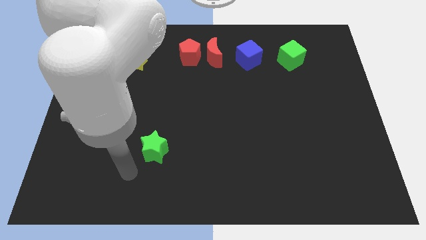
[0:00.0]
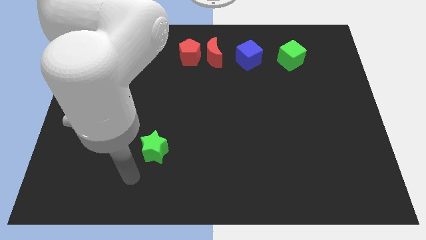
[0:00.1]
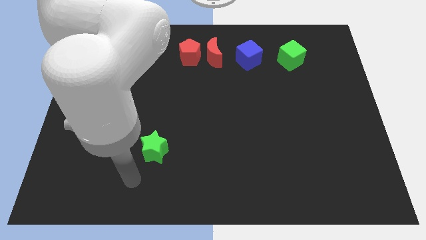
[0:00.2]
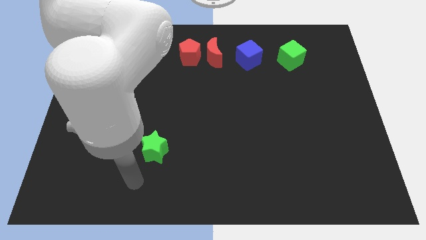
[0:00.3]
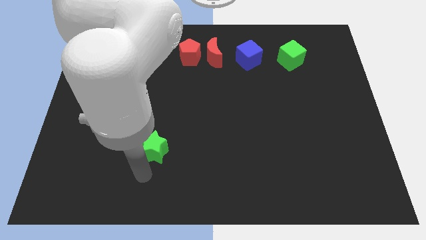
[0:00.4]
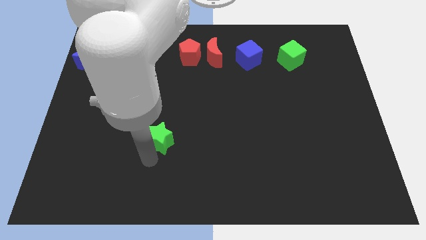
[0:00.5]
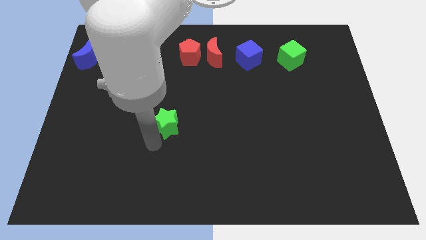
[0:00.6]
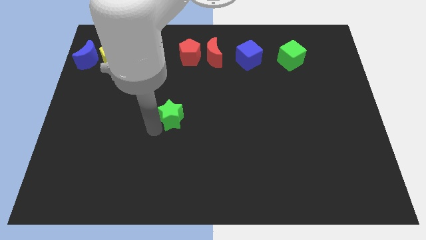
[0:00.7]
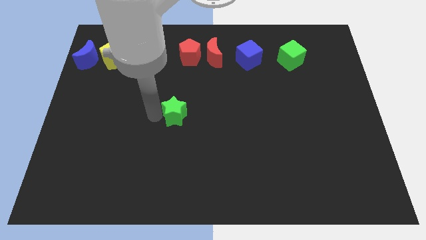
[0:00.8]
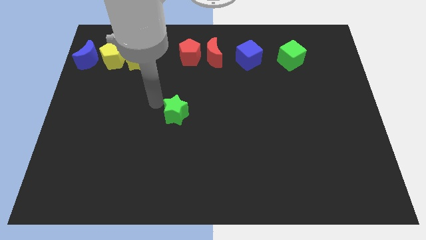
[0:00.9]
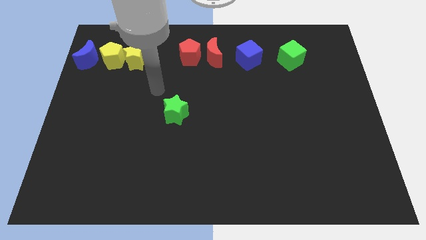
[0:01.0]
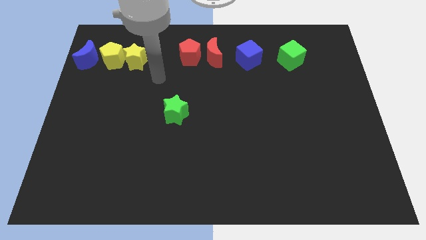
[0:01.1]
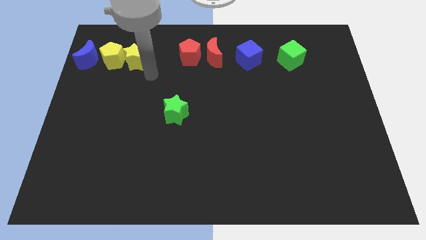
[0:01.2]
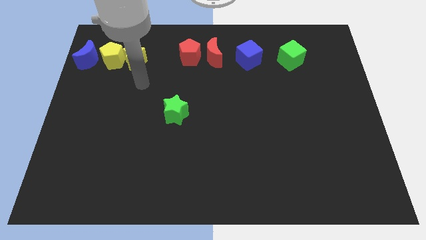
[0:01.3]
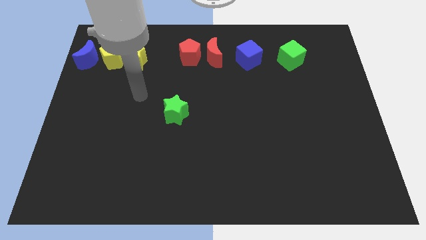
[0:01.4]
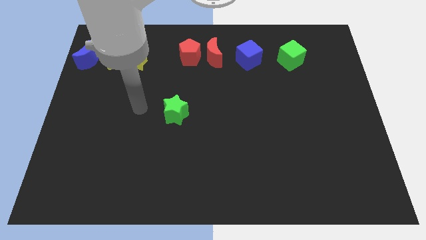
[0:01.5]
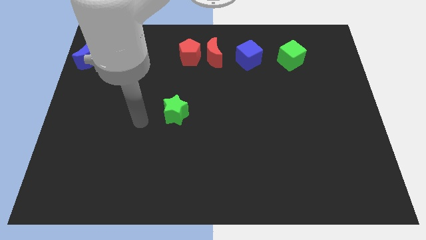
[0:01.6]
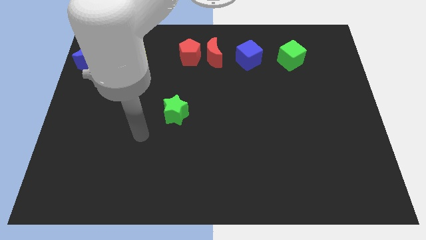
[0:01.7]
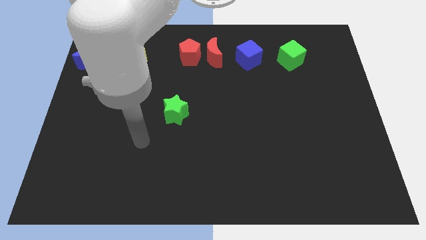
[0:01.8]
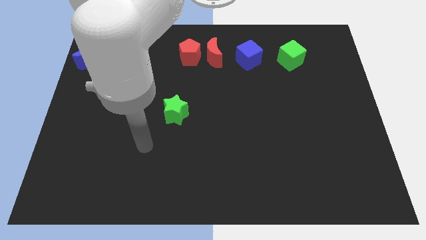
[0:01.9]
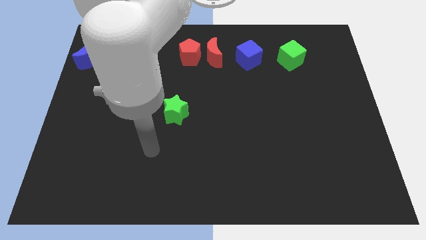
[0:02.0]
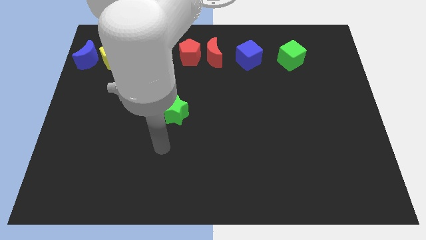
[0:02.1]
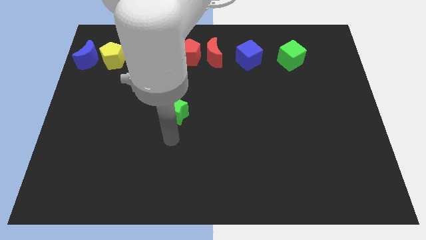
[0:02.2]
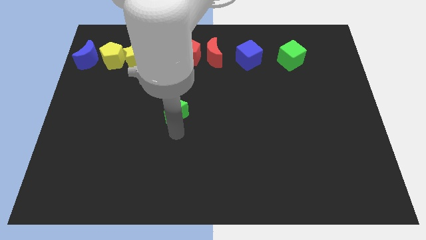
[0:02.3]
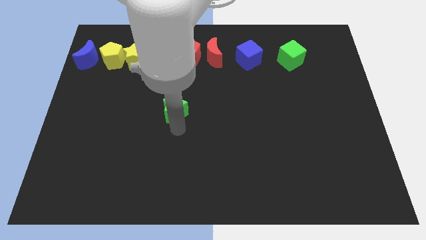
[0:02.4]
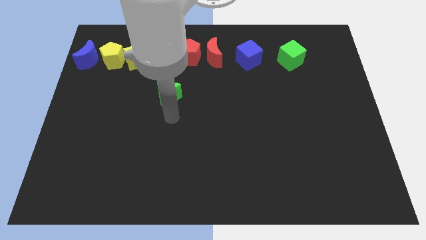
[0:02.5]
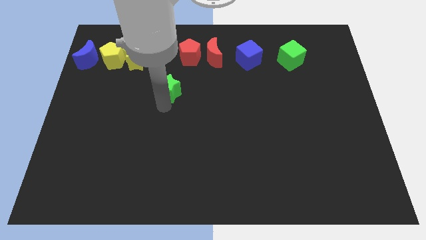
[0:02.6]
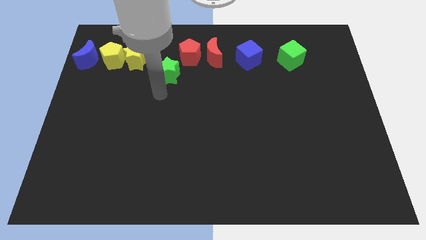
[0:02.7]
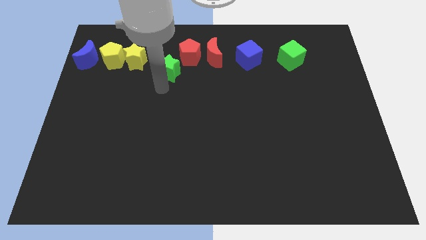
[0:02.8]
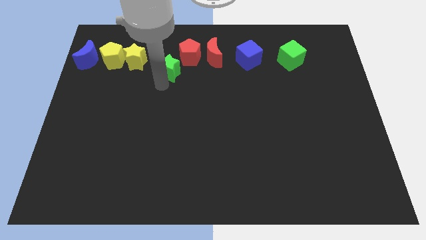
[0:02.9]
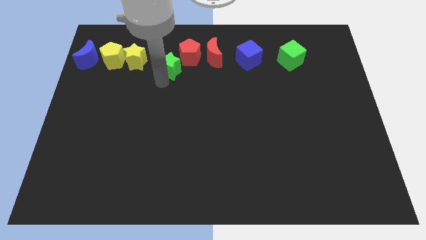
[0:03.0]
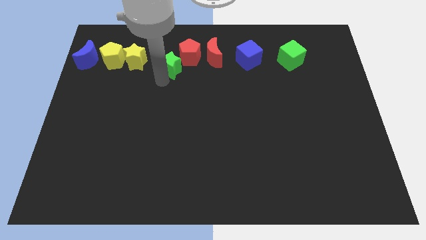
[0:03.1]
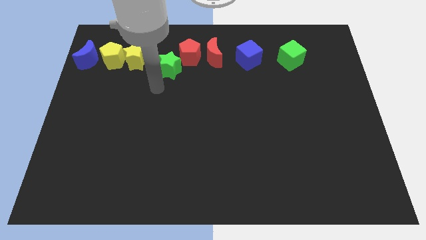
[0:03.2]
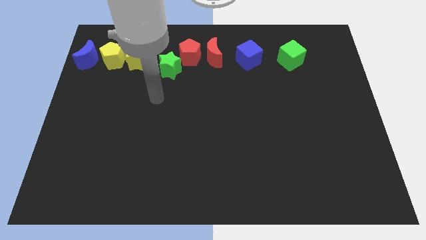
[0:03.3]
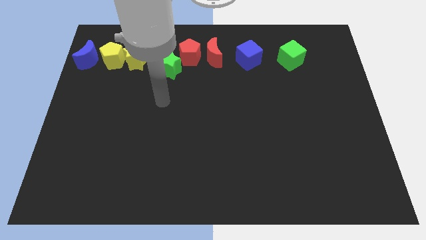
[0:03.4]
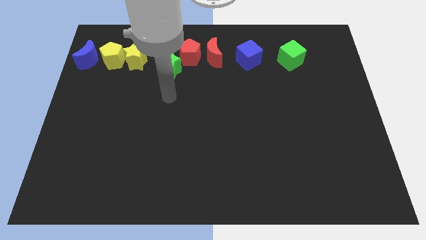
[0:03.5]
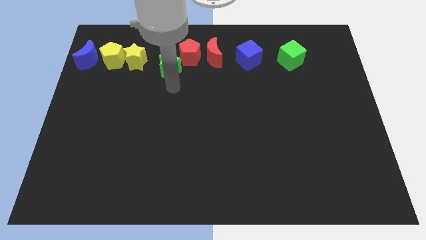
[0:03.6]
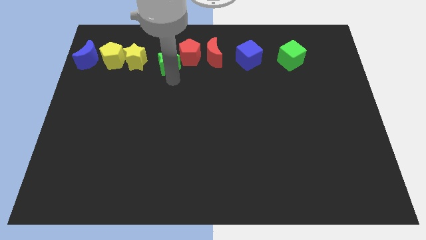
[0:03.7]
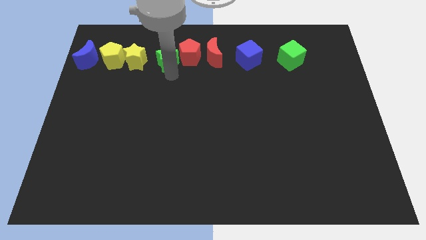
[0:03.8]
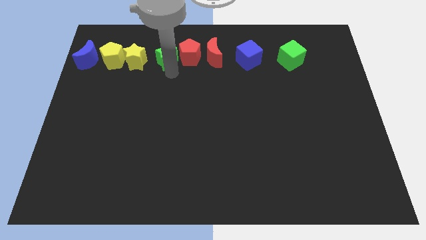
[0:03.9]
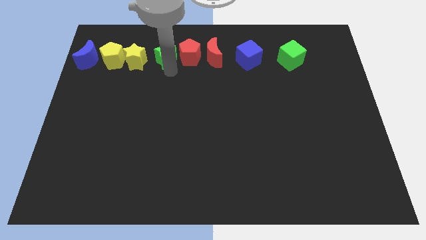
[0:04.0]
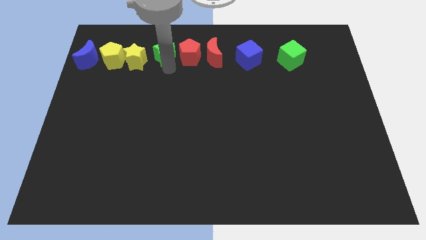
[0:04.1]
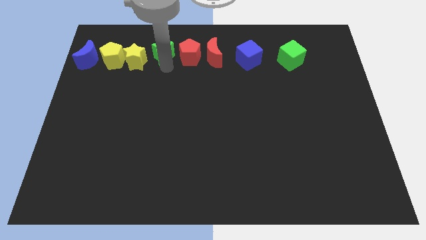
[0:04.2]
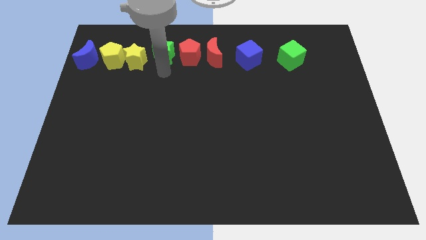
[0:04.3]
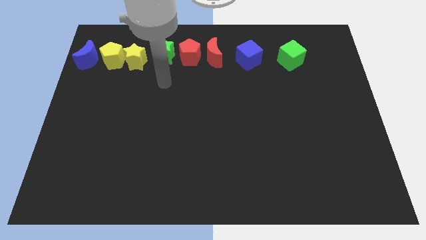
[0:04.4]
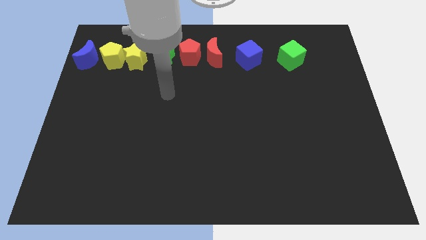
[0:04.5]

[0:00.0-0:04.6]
push the green star to the left of red pentagon

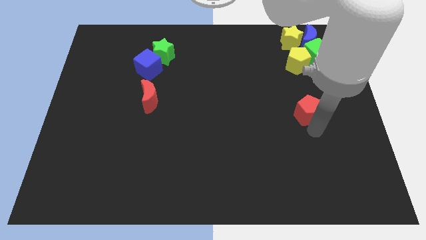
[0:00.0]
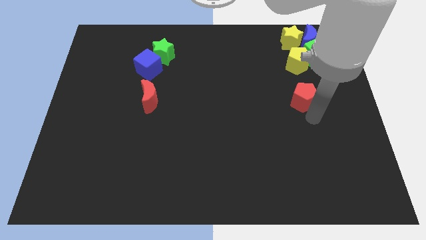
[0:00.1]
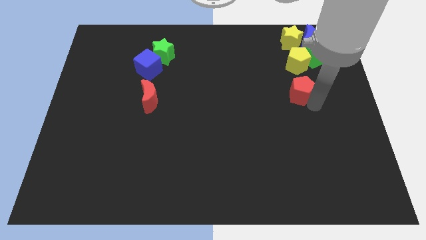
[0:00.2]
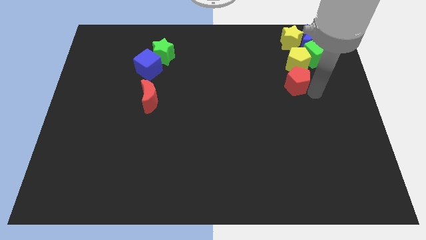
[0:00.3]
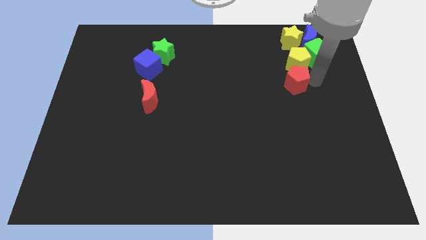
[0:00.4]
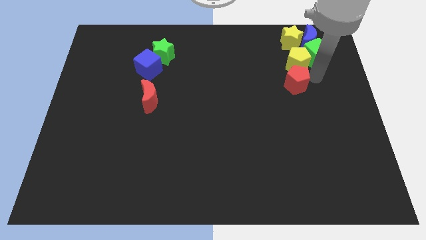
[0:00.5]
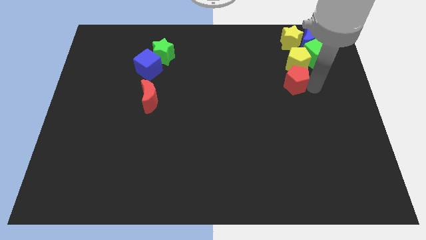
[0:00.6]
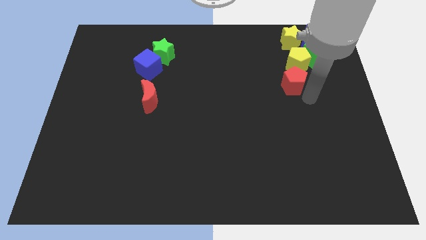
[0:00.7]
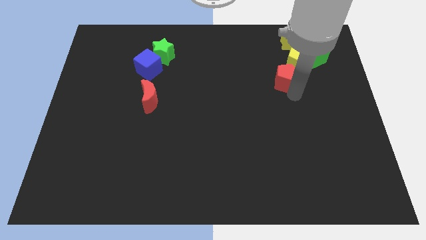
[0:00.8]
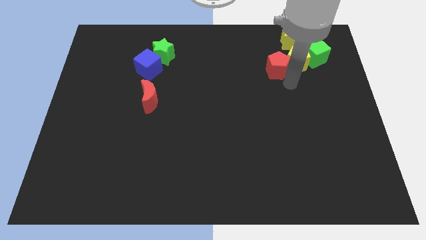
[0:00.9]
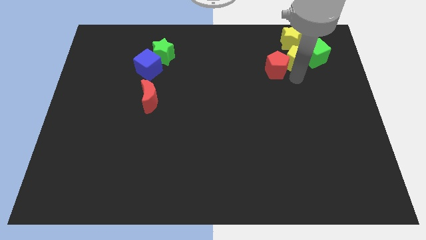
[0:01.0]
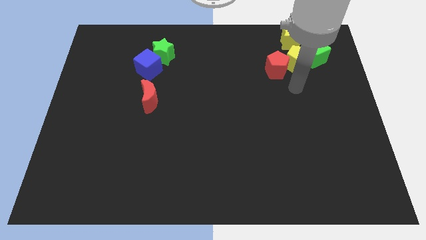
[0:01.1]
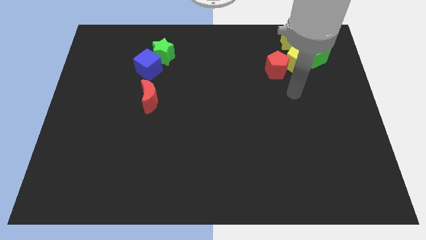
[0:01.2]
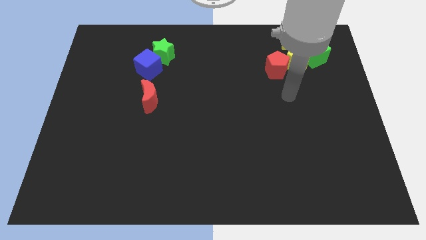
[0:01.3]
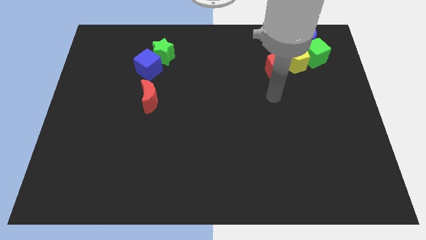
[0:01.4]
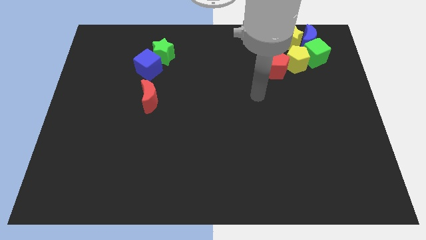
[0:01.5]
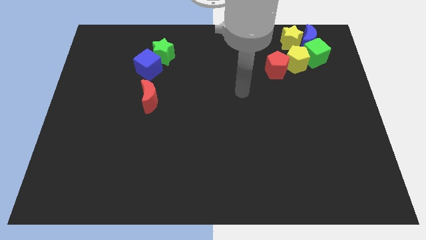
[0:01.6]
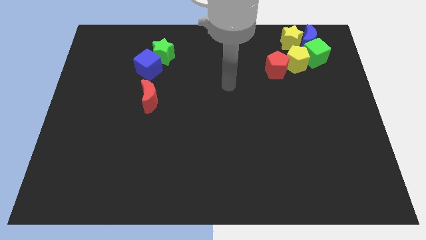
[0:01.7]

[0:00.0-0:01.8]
push the red pentagon to the left of the yellow pentagon

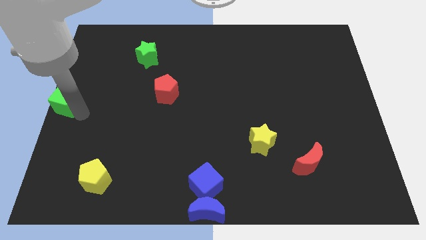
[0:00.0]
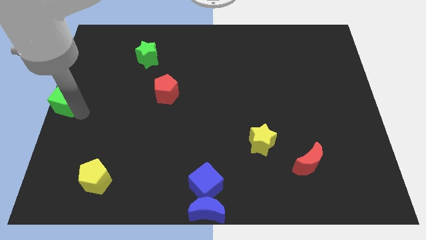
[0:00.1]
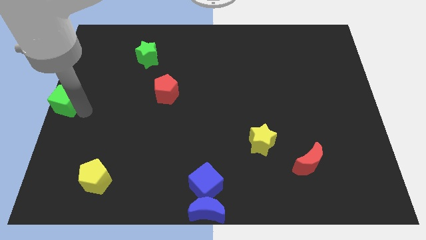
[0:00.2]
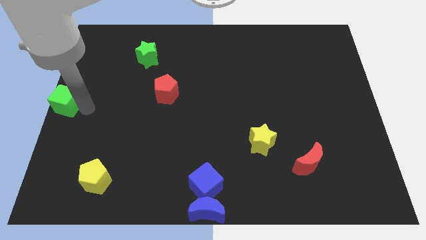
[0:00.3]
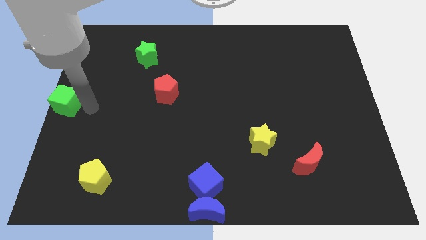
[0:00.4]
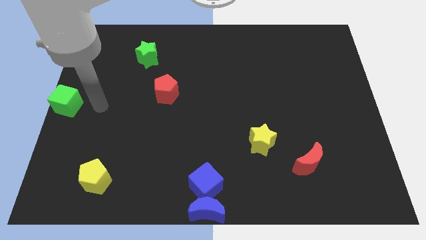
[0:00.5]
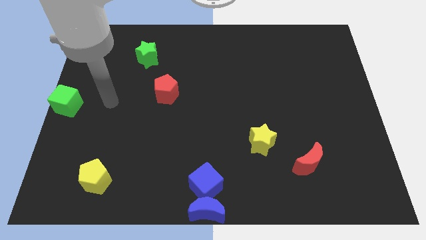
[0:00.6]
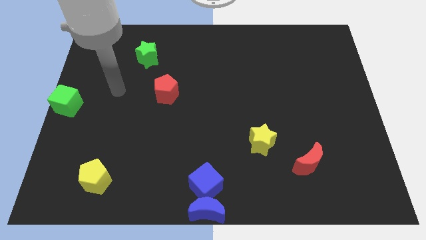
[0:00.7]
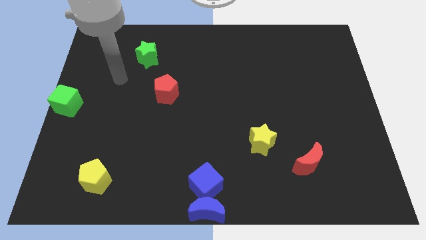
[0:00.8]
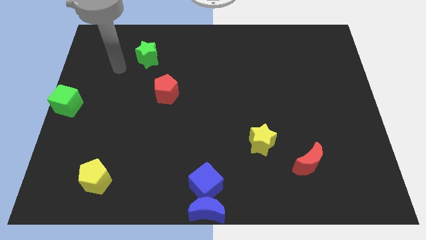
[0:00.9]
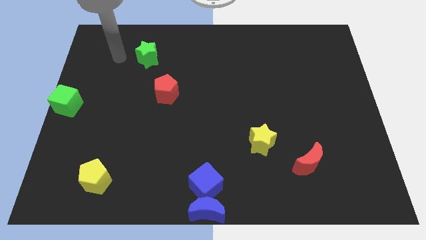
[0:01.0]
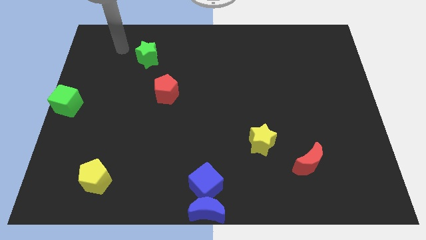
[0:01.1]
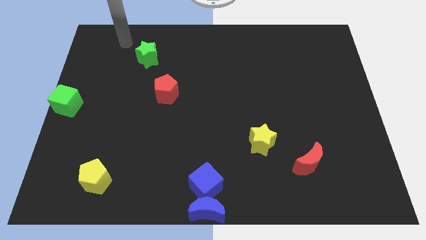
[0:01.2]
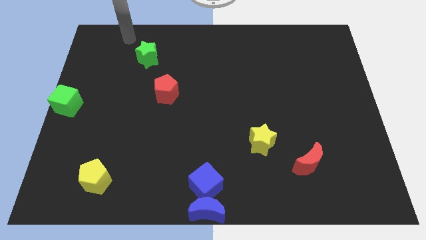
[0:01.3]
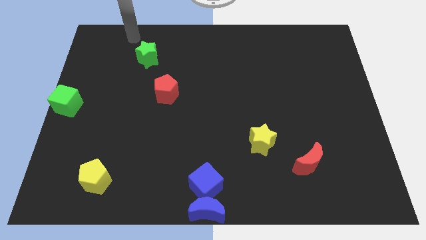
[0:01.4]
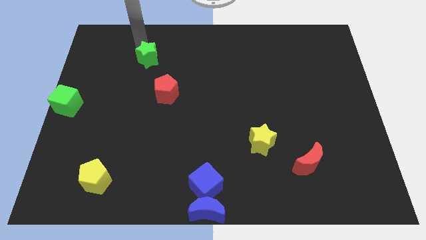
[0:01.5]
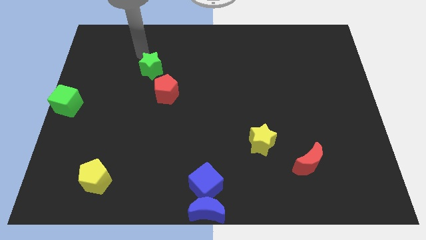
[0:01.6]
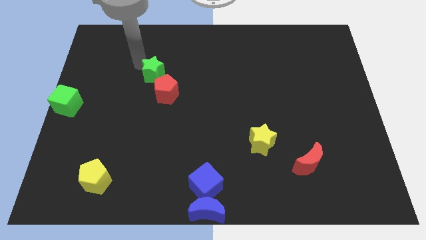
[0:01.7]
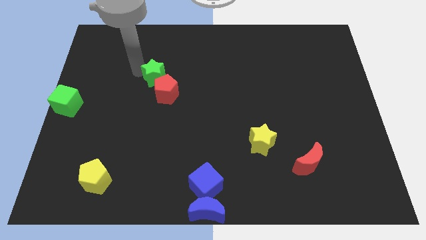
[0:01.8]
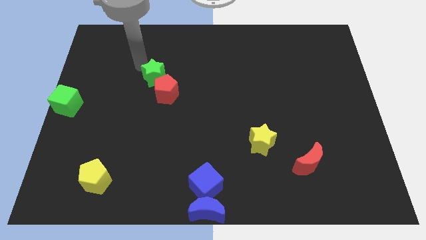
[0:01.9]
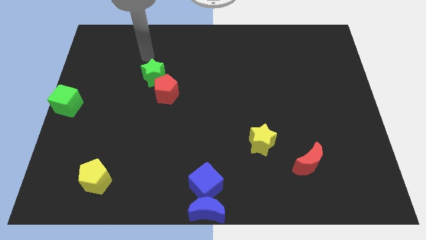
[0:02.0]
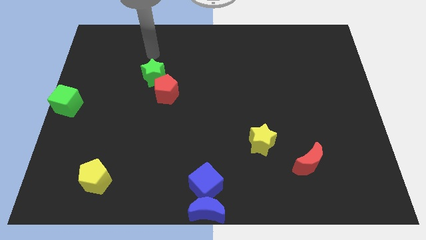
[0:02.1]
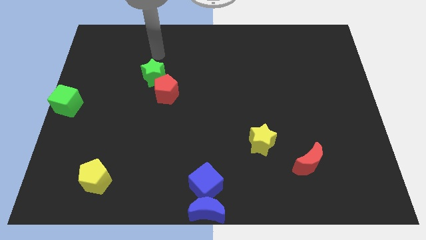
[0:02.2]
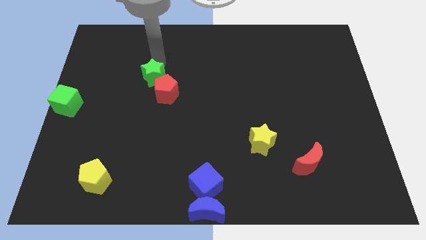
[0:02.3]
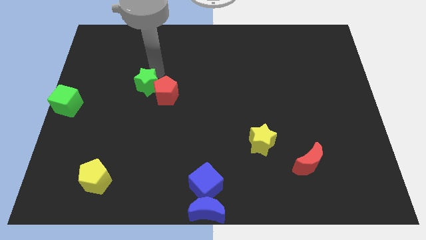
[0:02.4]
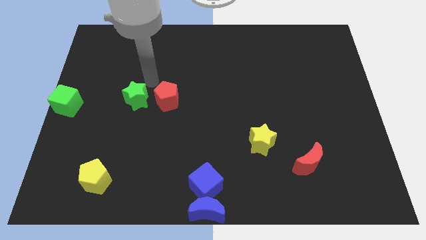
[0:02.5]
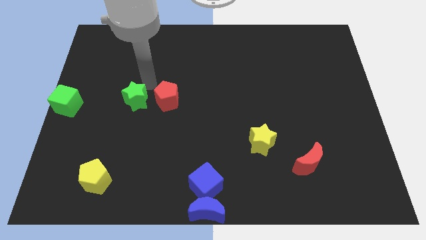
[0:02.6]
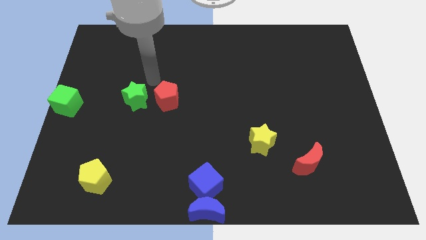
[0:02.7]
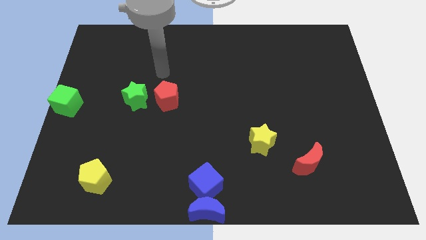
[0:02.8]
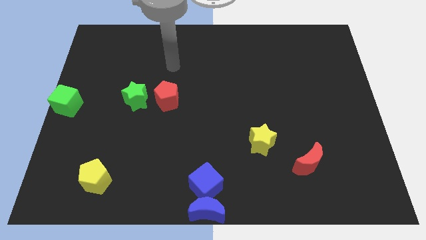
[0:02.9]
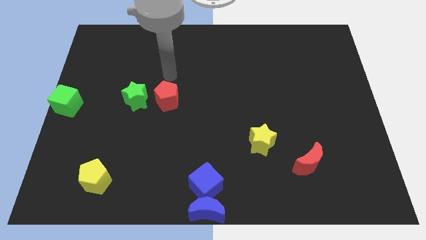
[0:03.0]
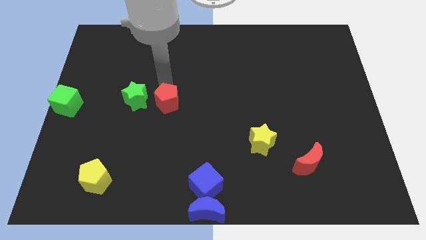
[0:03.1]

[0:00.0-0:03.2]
move the green star to the left of the red pentagon
